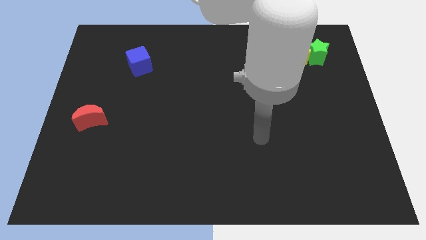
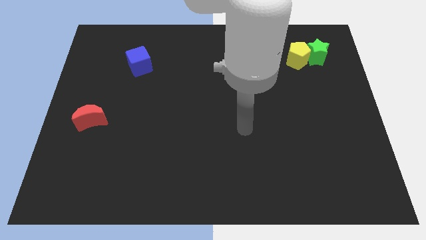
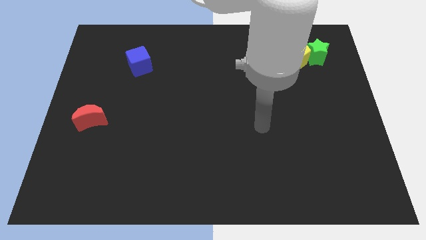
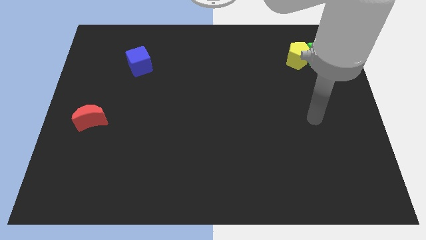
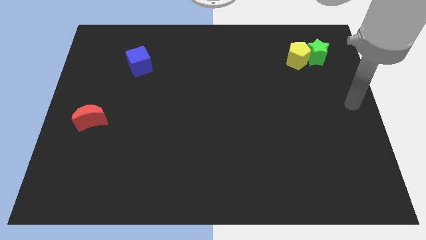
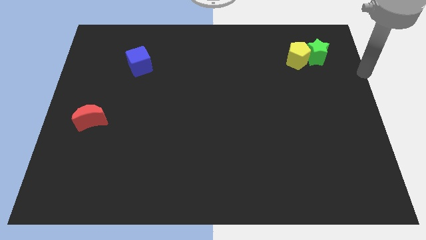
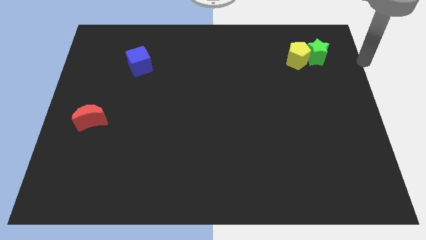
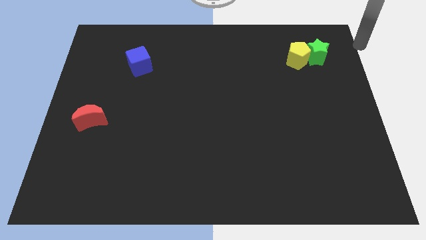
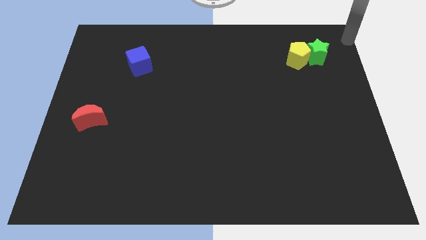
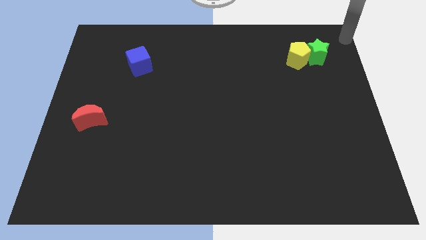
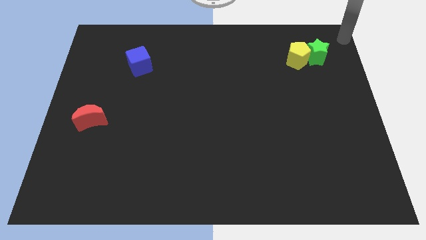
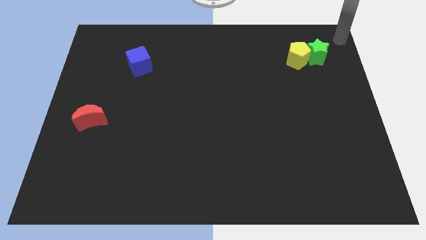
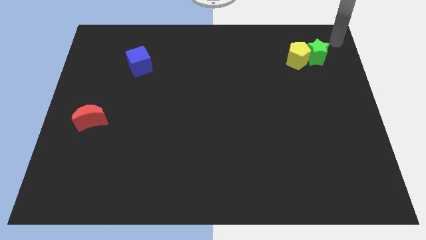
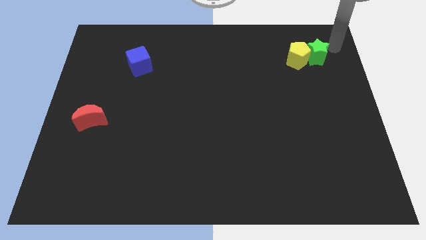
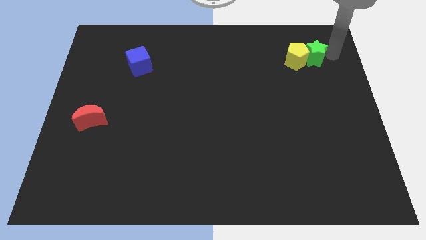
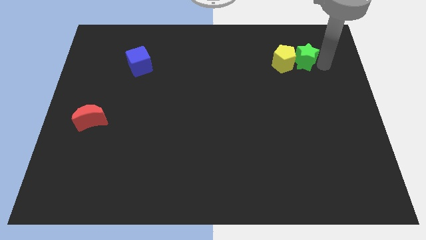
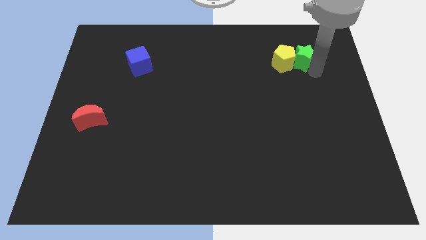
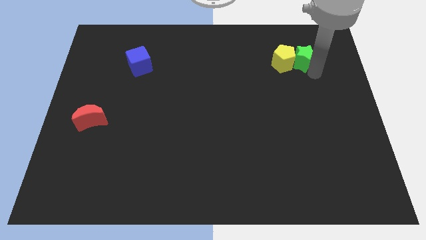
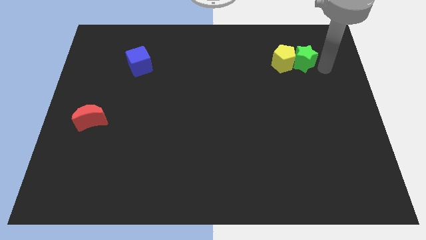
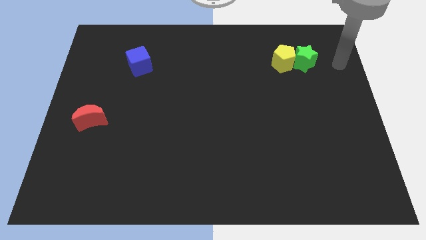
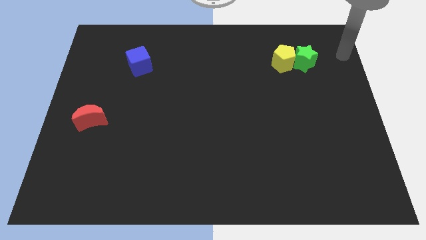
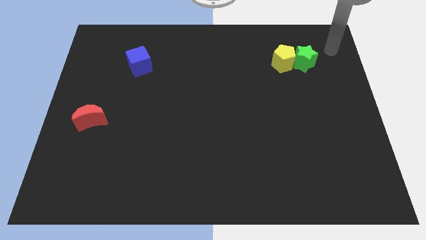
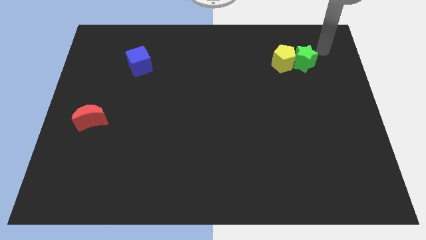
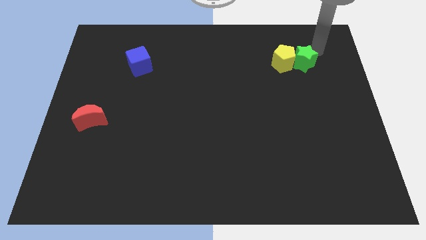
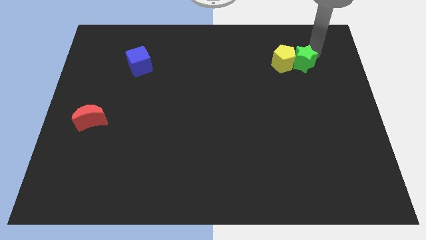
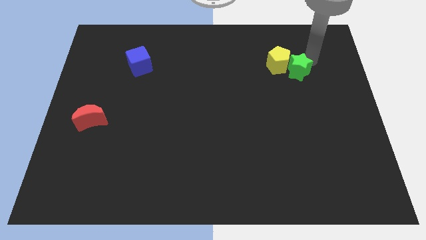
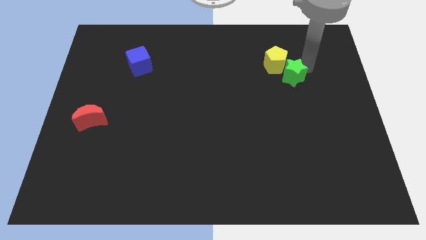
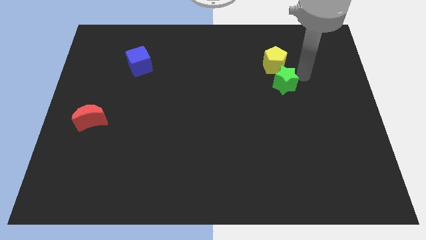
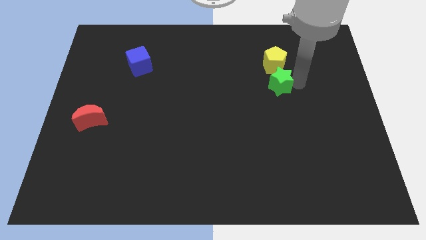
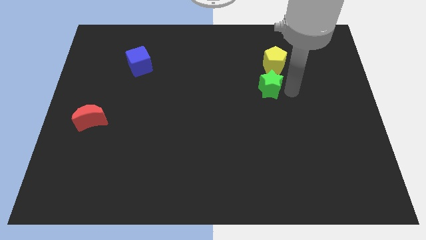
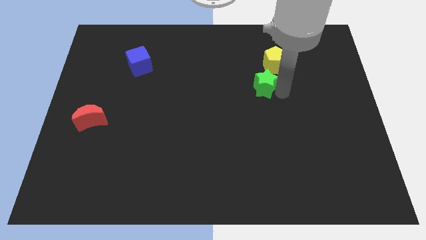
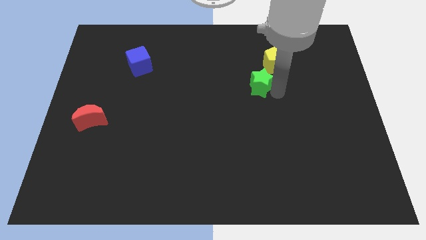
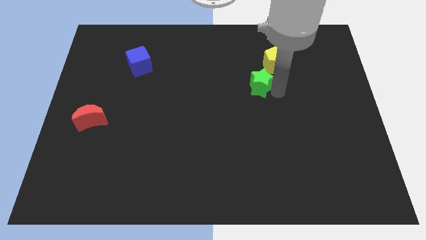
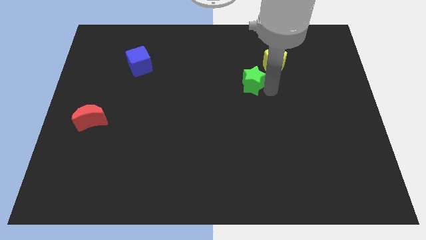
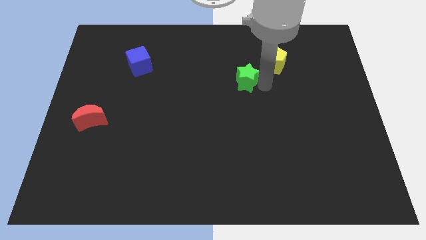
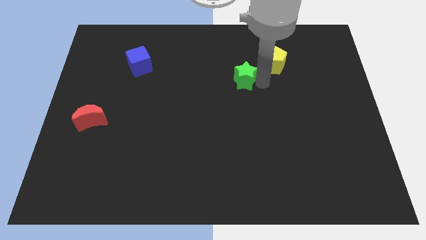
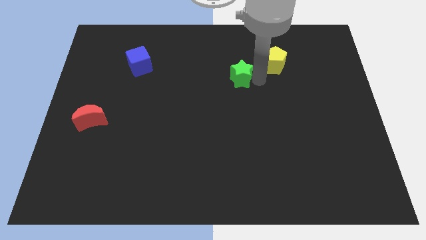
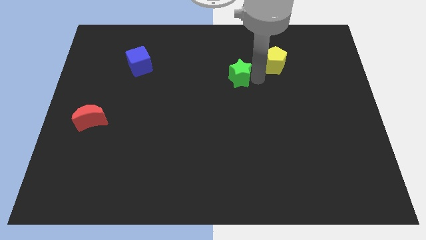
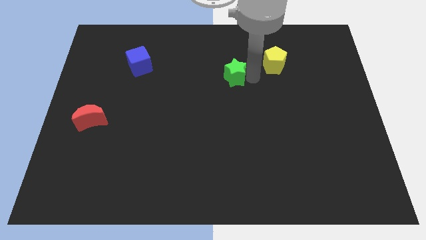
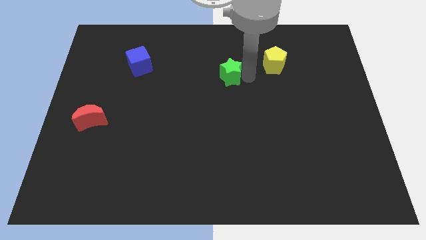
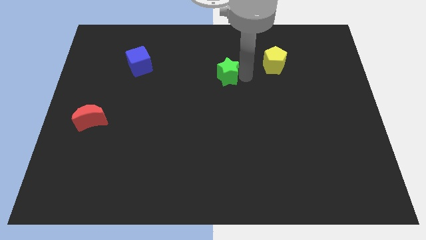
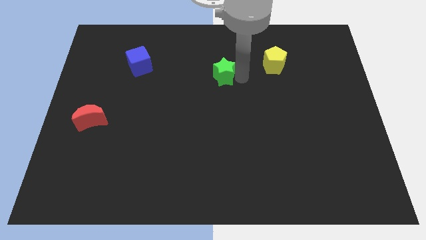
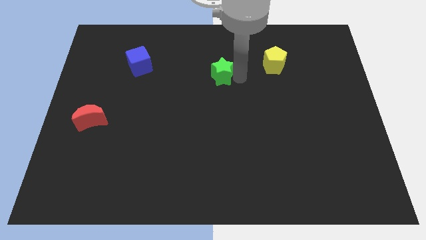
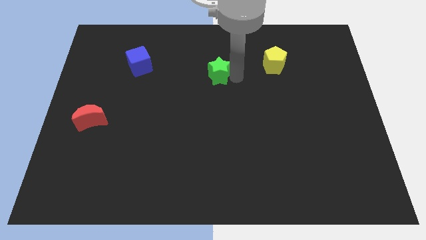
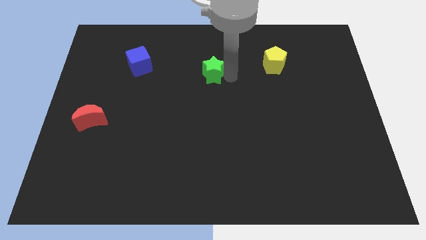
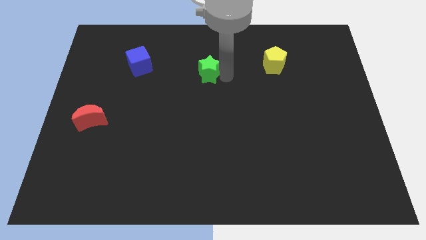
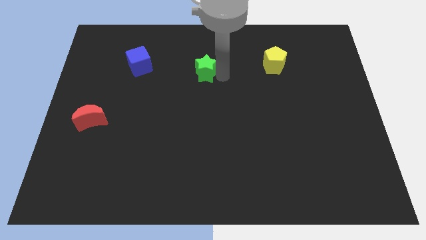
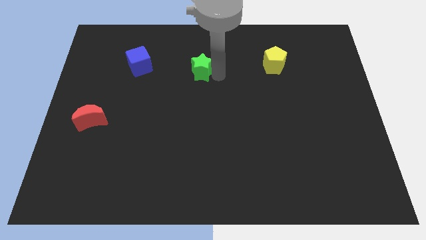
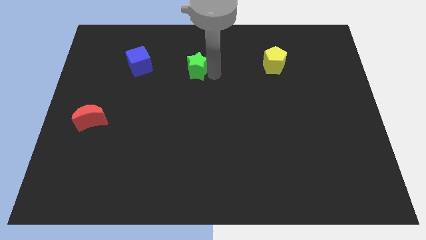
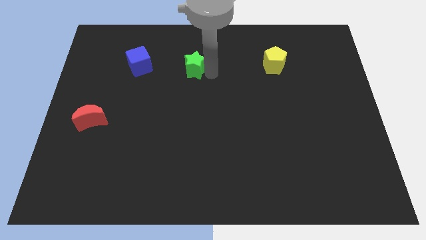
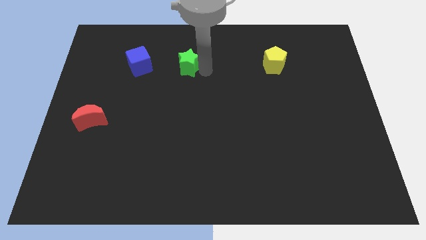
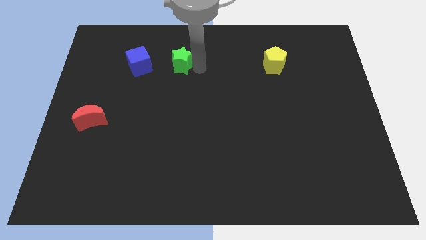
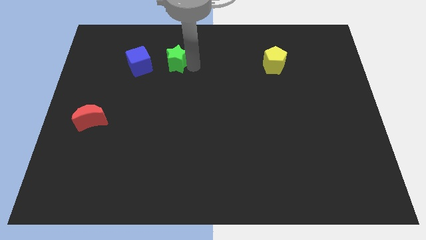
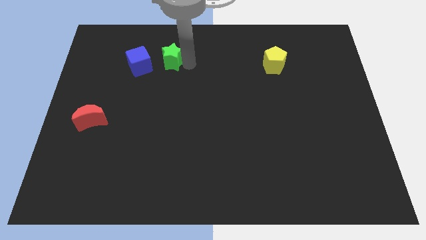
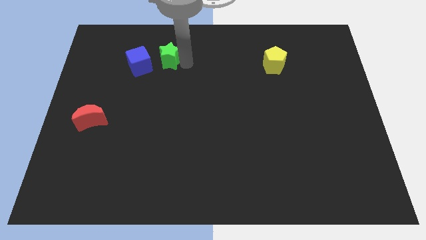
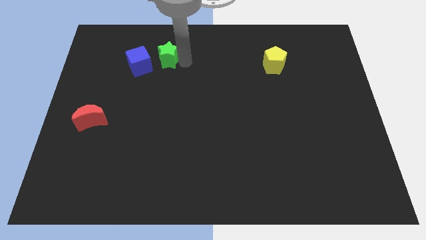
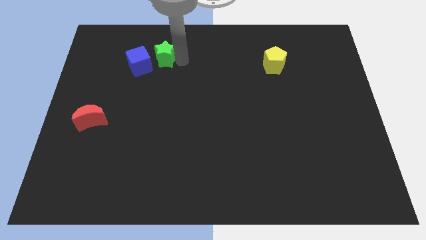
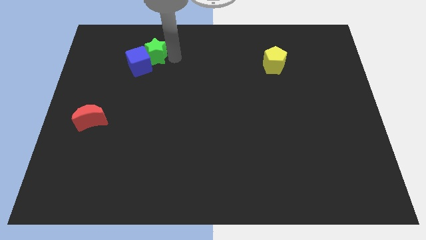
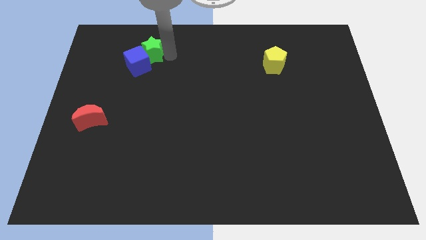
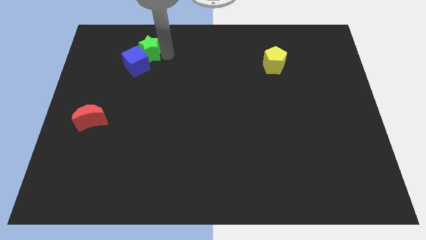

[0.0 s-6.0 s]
slide the green block to the cube

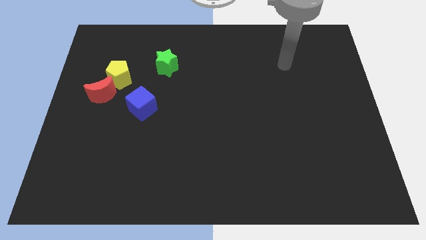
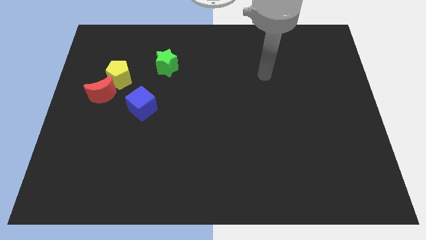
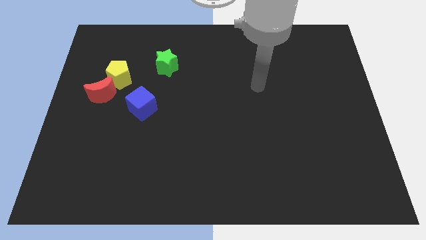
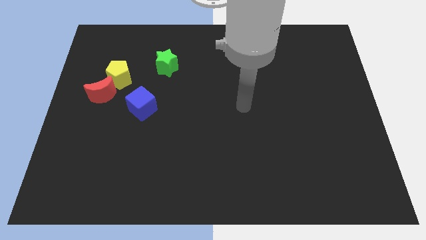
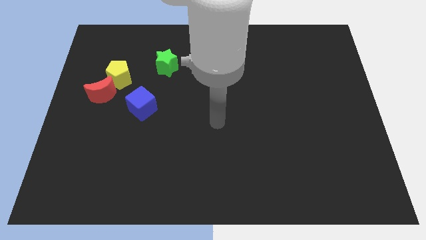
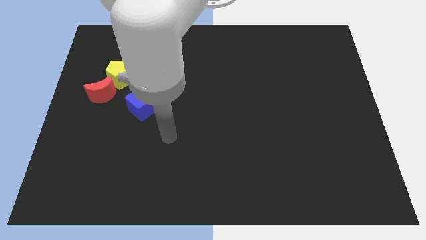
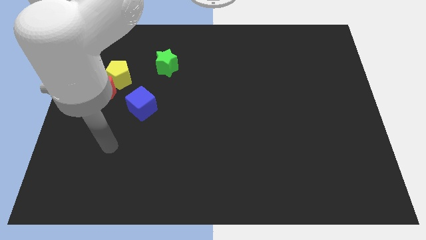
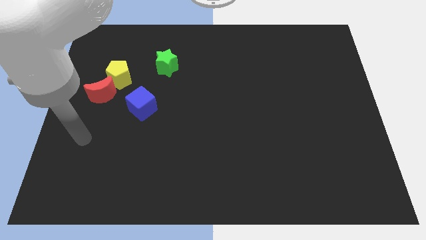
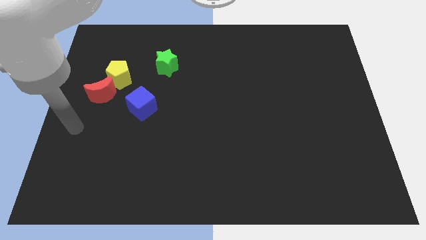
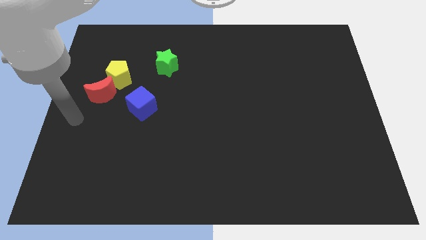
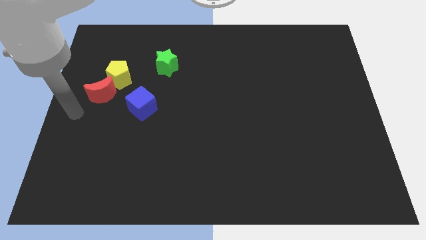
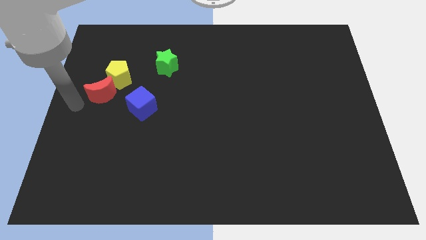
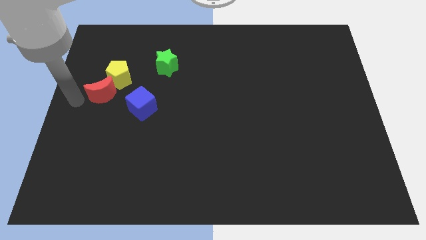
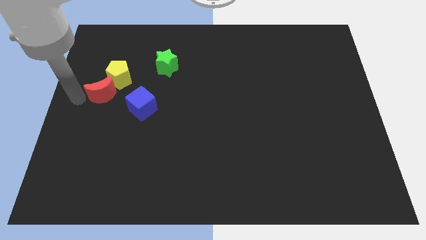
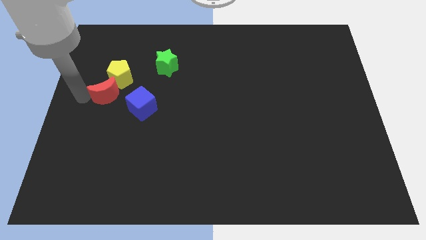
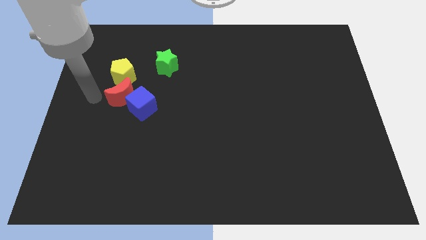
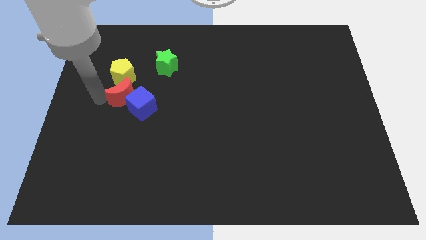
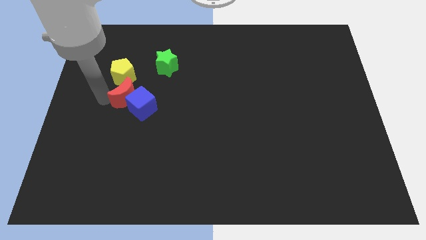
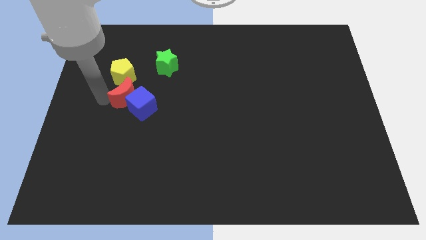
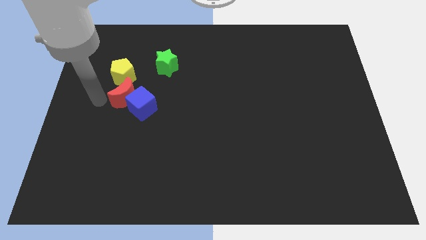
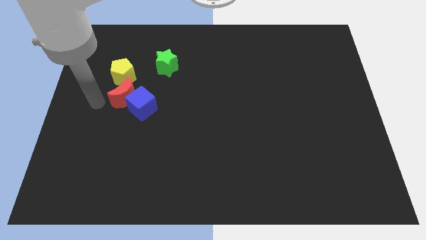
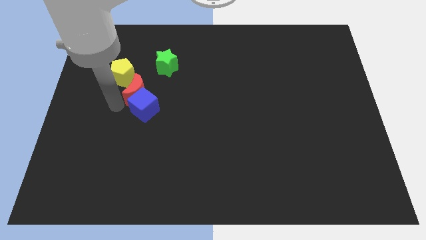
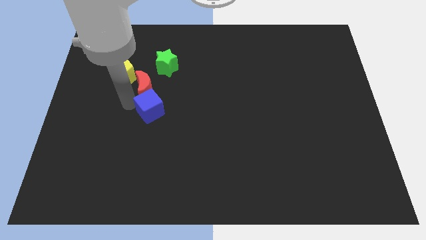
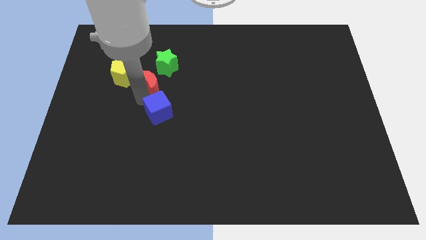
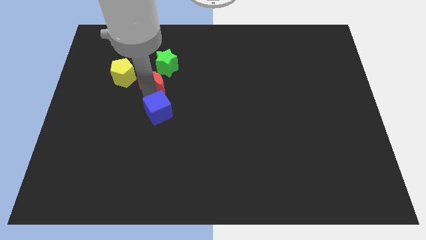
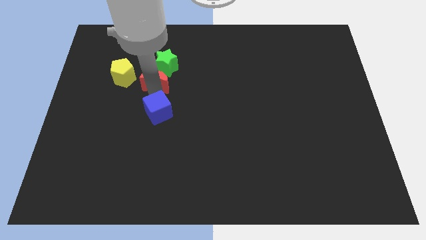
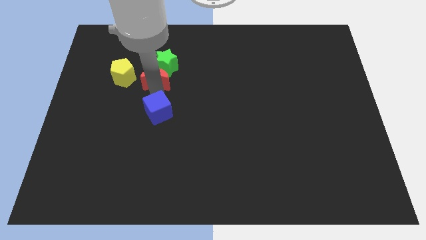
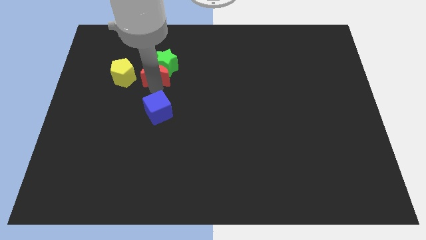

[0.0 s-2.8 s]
put the moon close to the star

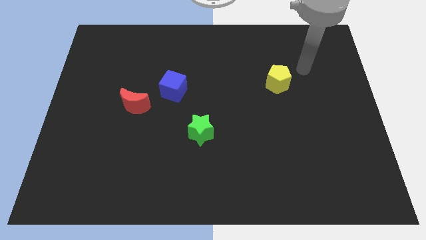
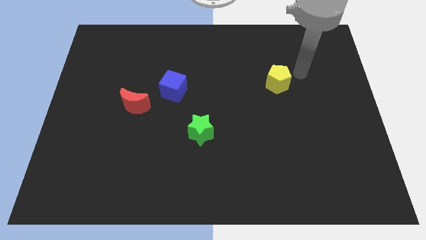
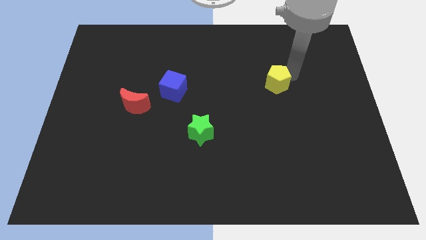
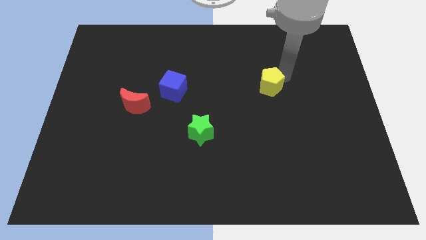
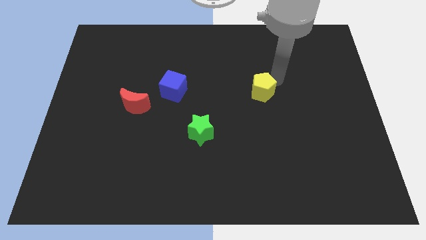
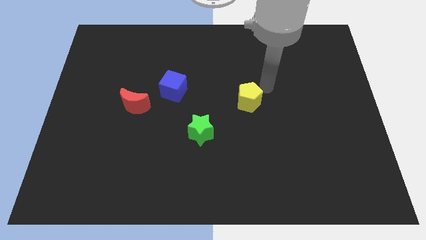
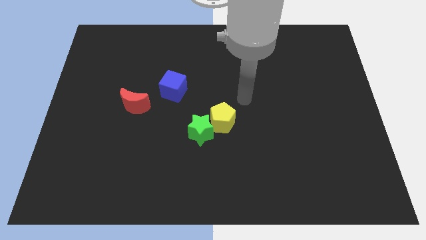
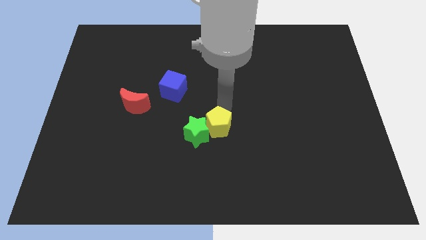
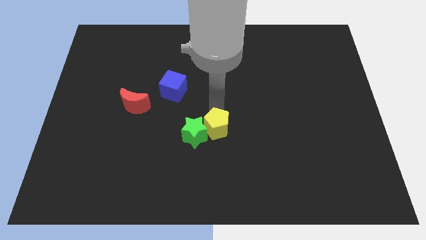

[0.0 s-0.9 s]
push the pentagon next to the green star
